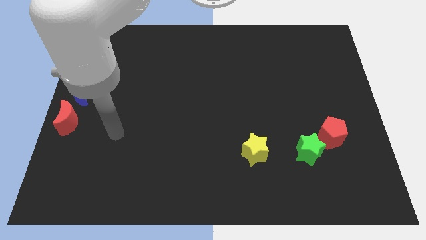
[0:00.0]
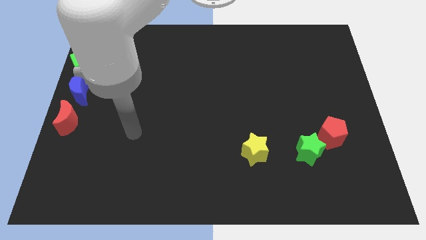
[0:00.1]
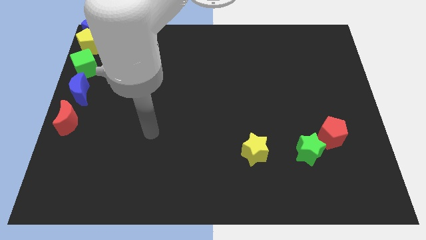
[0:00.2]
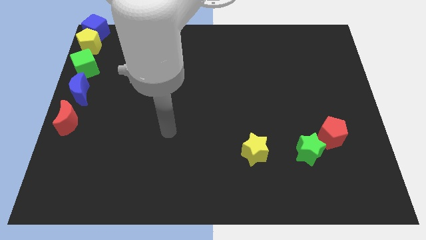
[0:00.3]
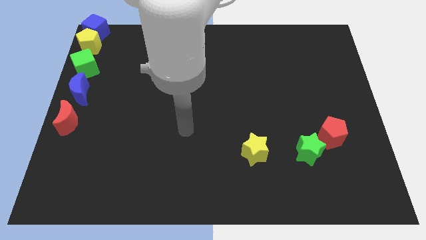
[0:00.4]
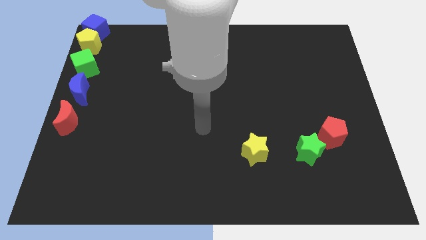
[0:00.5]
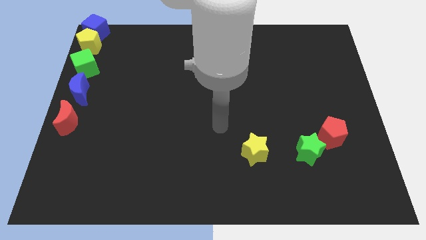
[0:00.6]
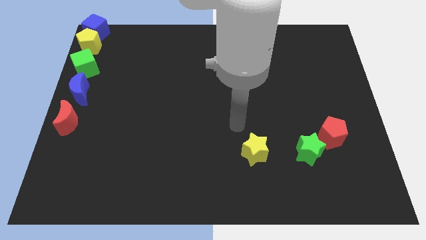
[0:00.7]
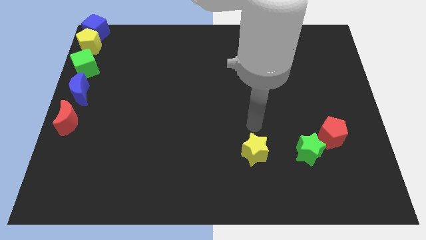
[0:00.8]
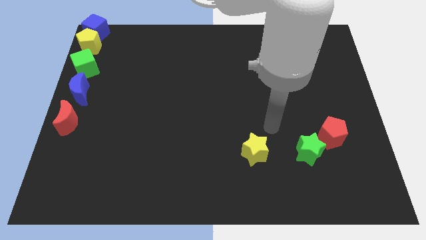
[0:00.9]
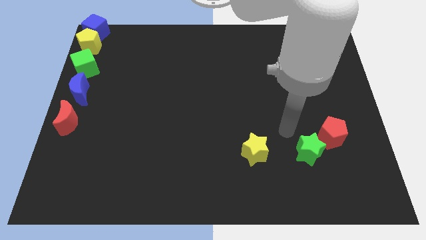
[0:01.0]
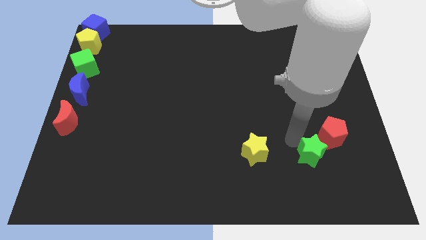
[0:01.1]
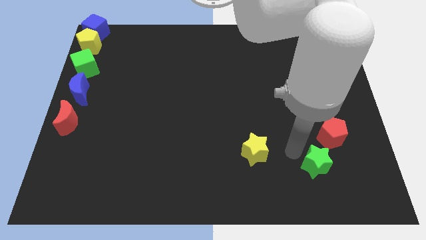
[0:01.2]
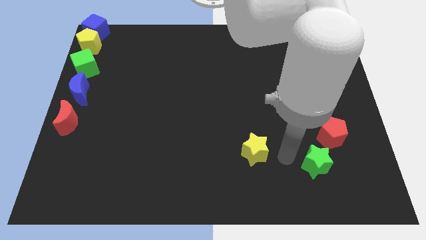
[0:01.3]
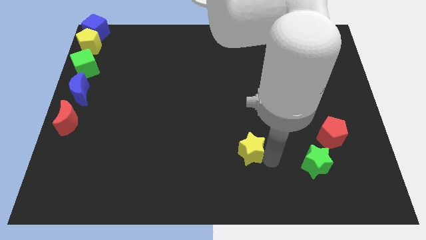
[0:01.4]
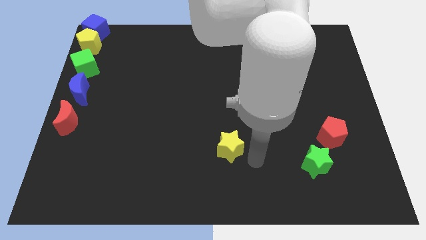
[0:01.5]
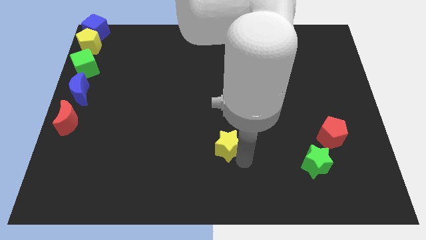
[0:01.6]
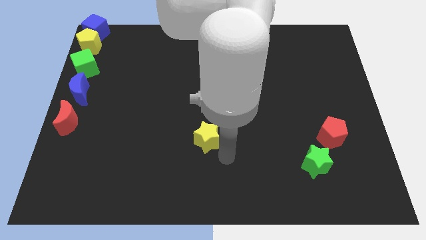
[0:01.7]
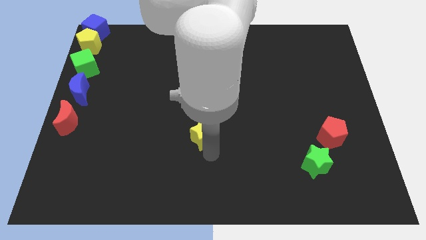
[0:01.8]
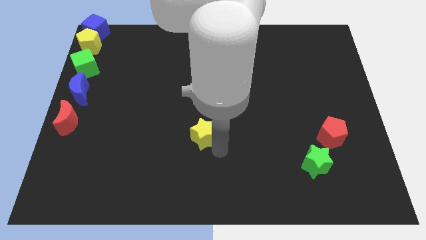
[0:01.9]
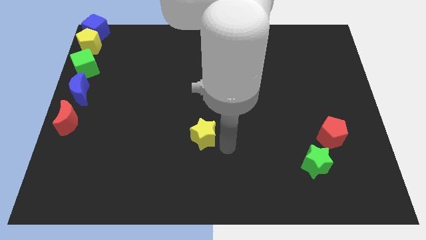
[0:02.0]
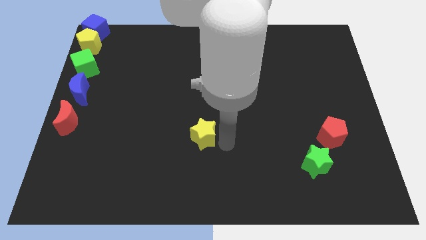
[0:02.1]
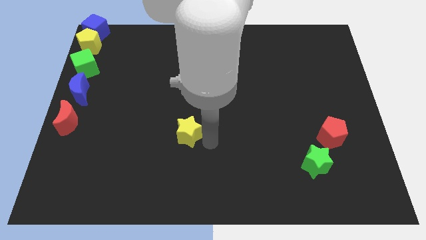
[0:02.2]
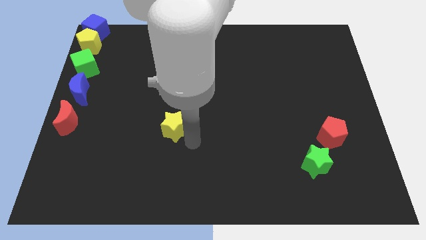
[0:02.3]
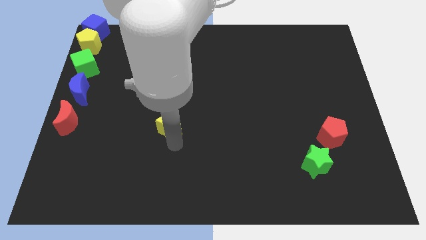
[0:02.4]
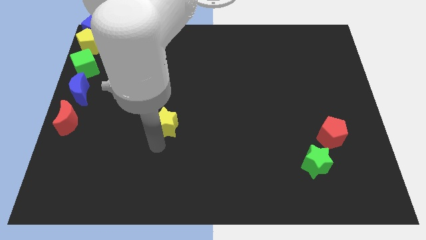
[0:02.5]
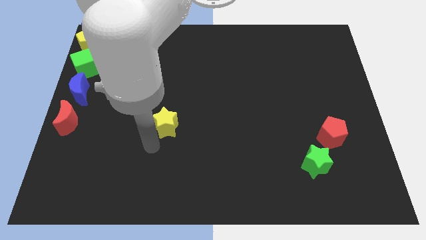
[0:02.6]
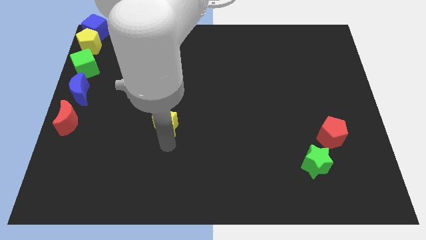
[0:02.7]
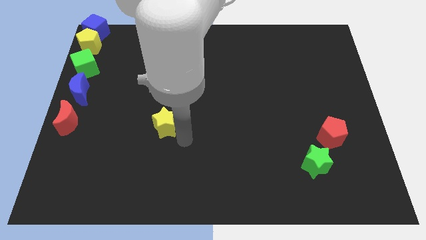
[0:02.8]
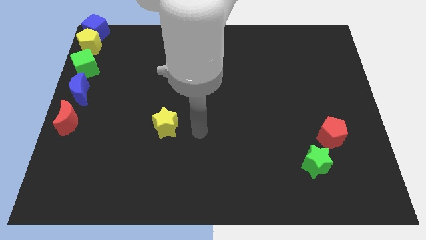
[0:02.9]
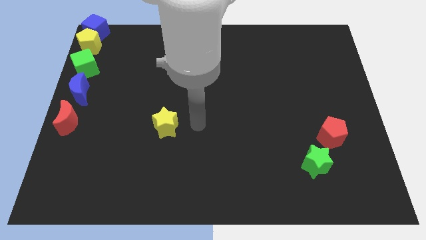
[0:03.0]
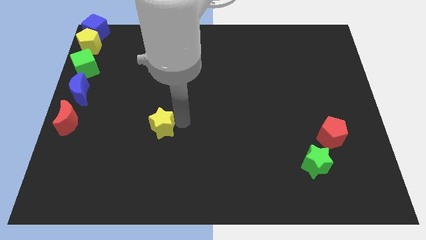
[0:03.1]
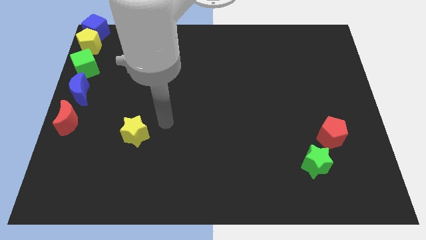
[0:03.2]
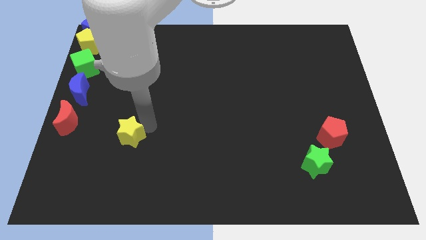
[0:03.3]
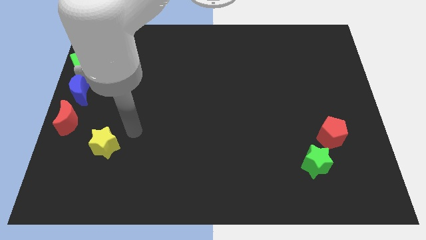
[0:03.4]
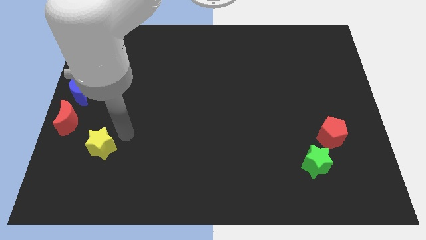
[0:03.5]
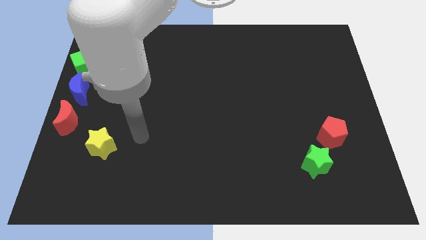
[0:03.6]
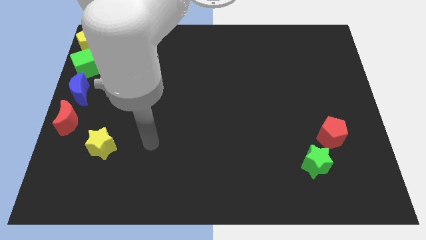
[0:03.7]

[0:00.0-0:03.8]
slide the yellow star diagonally to the bottom right of the red moon

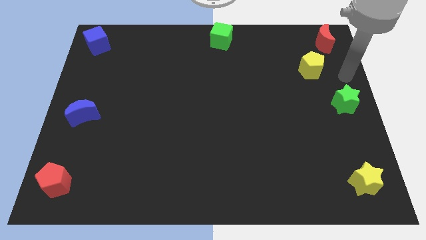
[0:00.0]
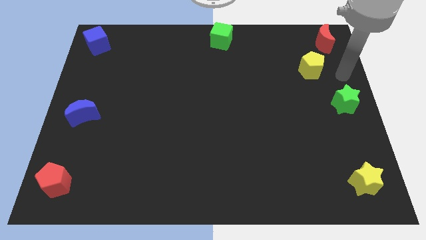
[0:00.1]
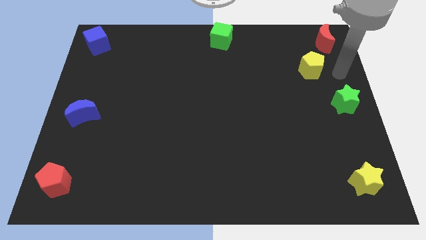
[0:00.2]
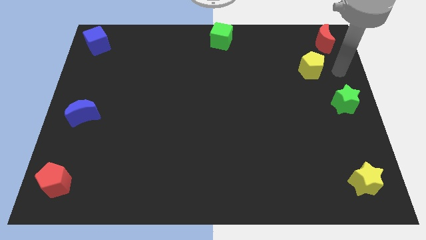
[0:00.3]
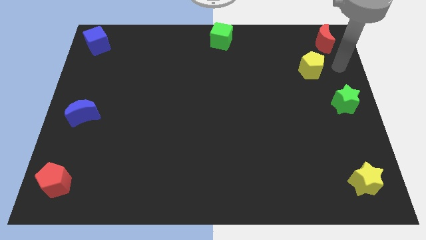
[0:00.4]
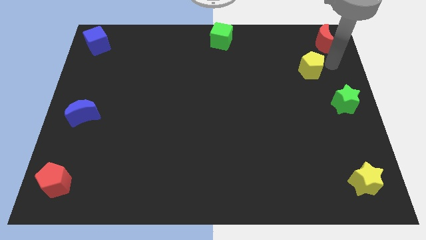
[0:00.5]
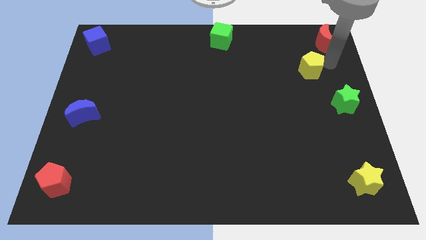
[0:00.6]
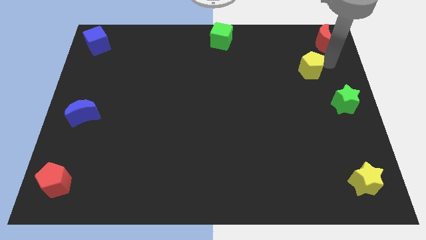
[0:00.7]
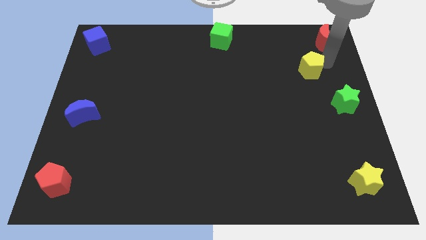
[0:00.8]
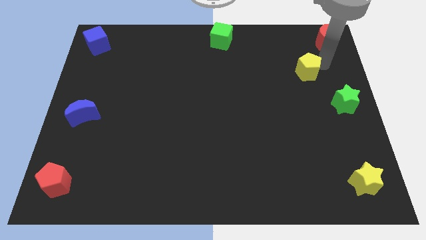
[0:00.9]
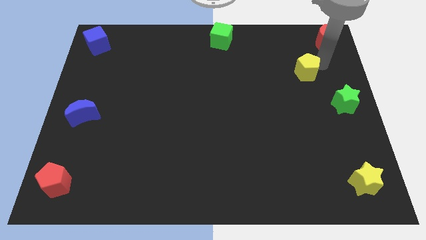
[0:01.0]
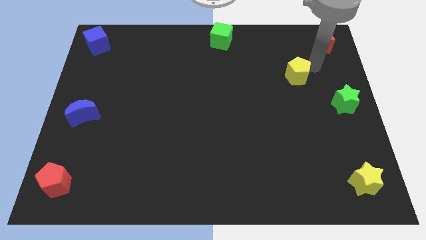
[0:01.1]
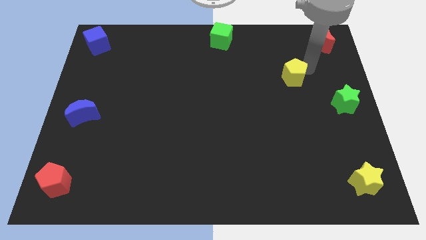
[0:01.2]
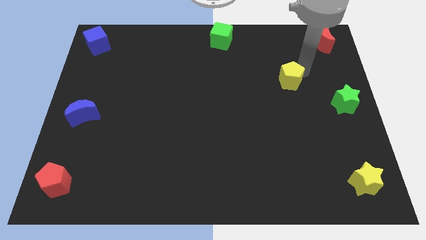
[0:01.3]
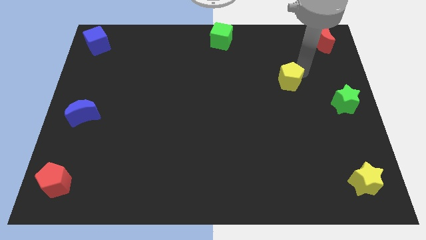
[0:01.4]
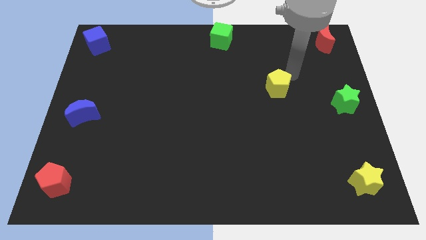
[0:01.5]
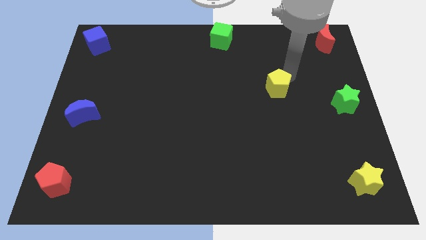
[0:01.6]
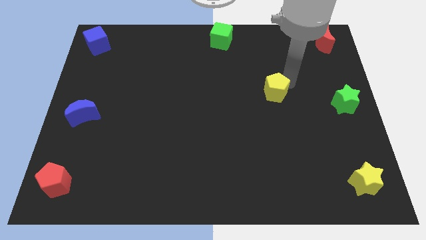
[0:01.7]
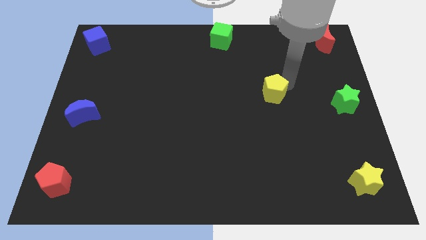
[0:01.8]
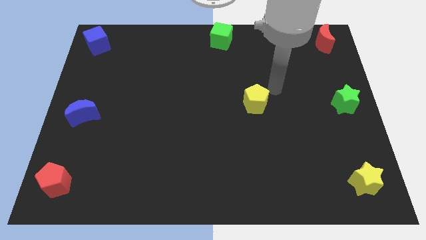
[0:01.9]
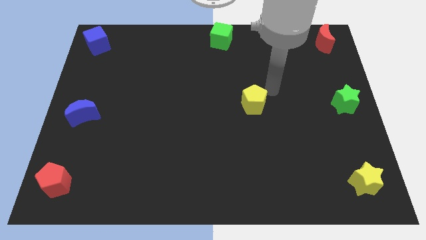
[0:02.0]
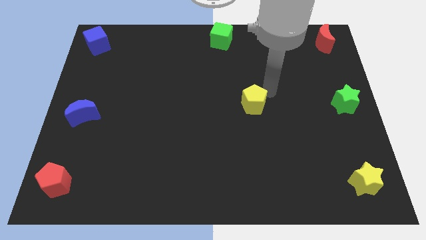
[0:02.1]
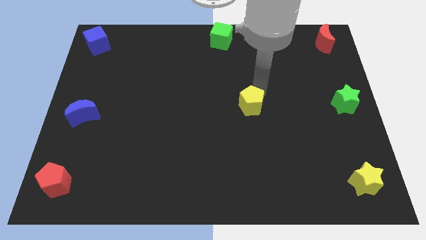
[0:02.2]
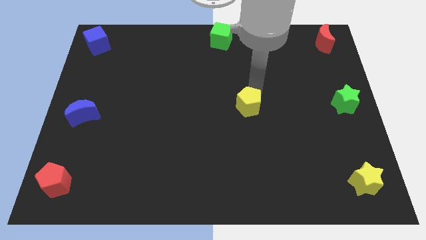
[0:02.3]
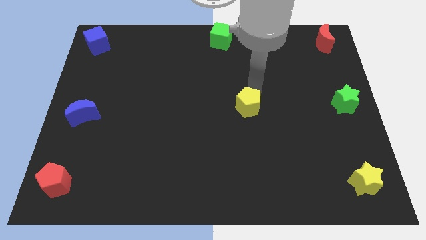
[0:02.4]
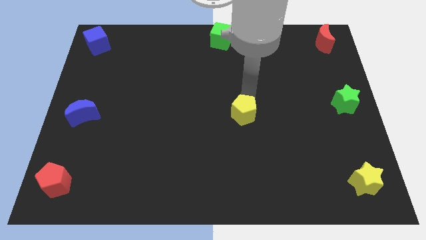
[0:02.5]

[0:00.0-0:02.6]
move the yellow pentagon to the left of the green star

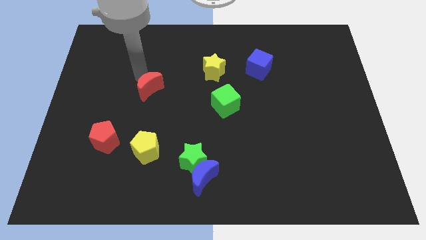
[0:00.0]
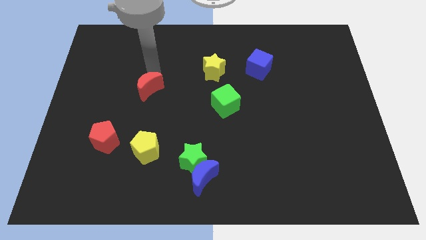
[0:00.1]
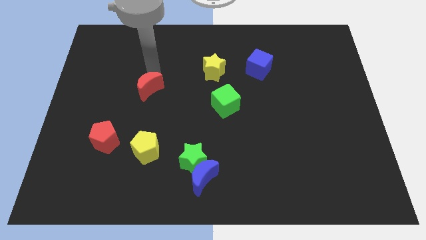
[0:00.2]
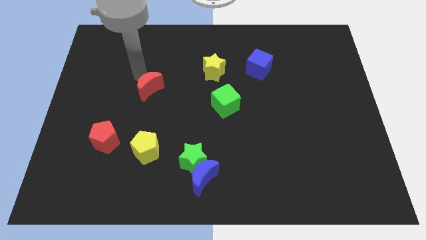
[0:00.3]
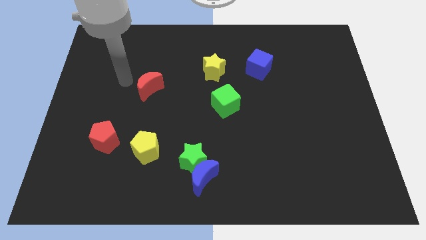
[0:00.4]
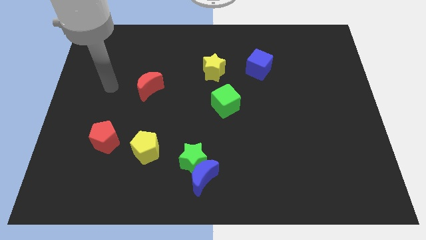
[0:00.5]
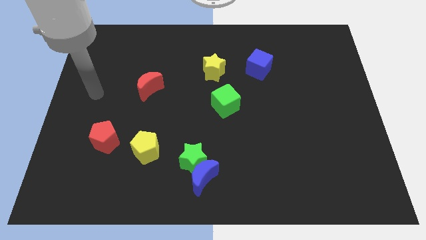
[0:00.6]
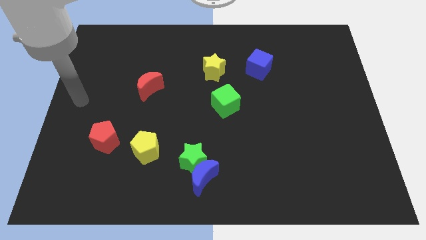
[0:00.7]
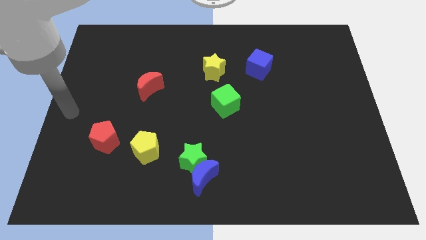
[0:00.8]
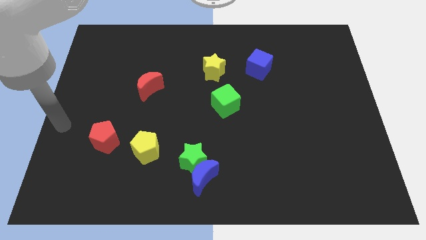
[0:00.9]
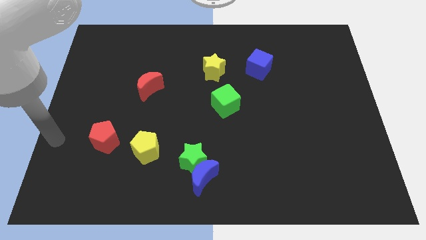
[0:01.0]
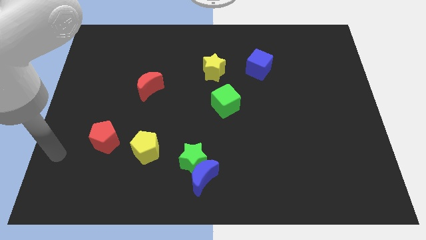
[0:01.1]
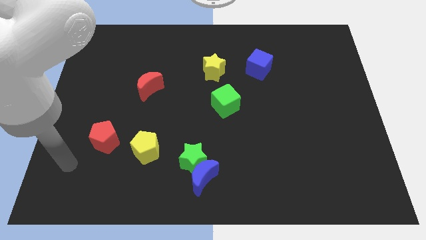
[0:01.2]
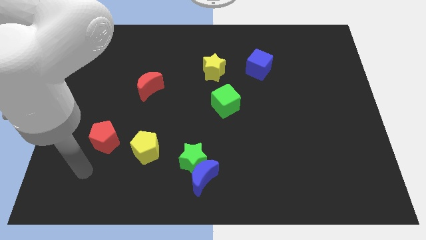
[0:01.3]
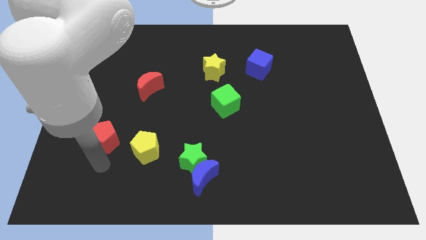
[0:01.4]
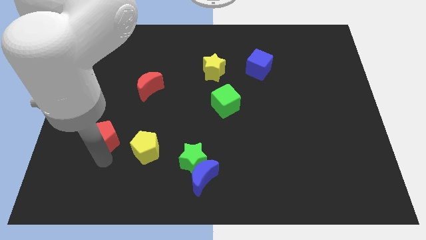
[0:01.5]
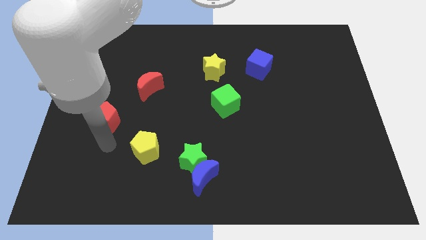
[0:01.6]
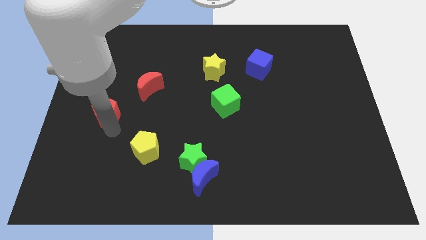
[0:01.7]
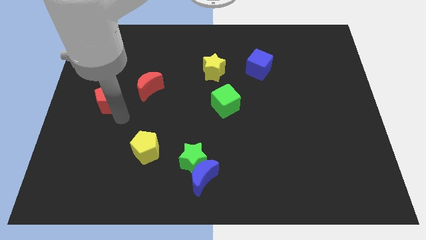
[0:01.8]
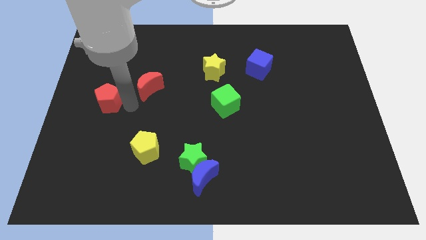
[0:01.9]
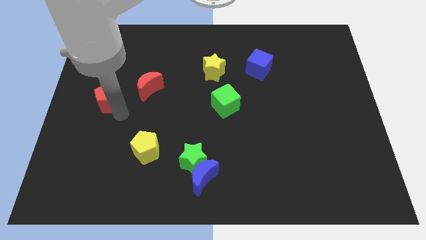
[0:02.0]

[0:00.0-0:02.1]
move the red pentagon towards the left side of the red crescent

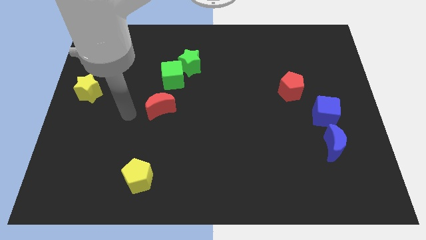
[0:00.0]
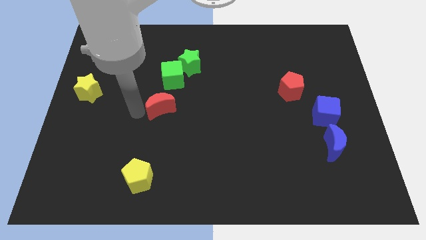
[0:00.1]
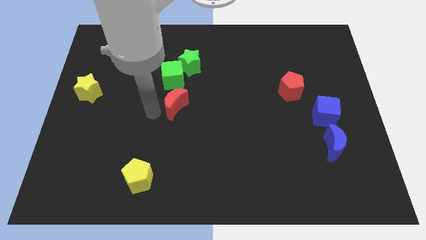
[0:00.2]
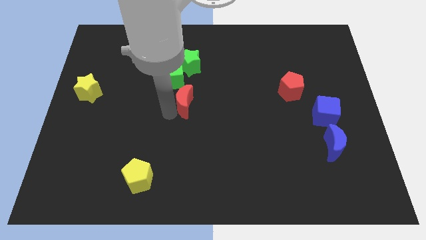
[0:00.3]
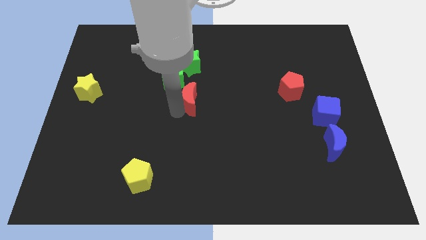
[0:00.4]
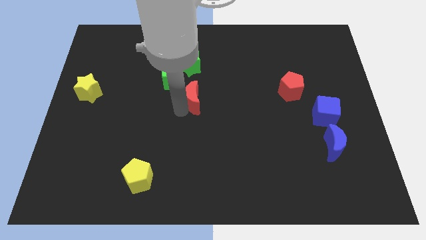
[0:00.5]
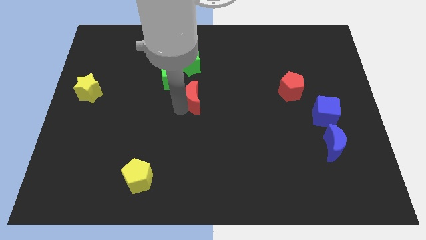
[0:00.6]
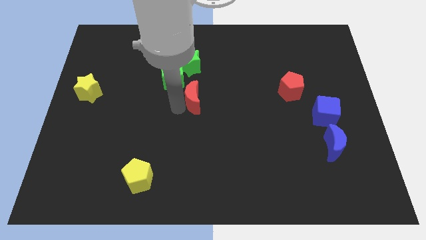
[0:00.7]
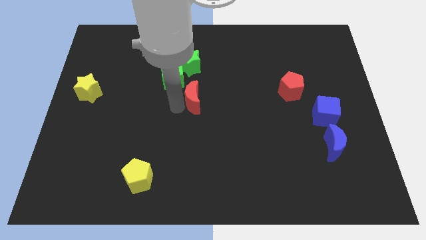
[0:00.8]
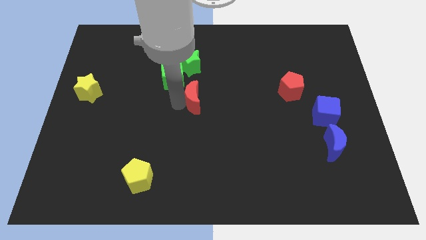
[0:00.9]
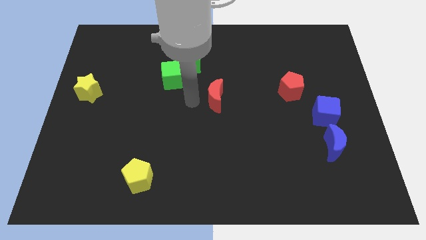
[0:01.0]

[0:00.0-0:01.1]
push the red crescent to the bottom right of the green star
